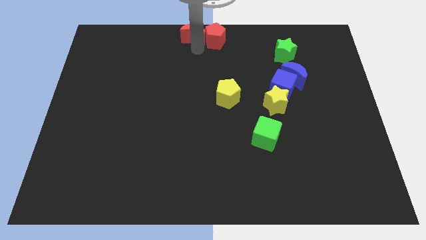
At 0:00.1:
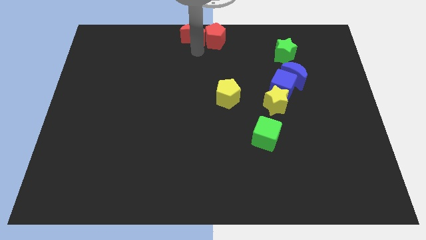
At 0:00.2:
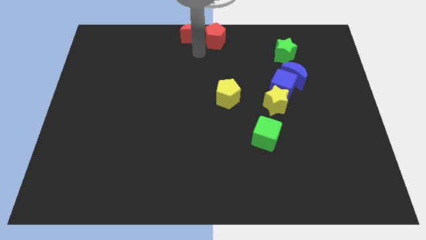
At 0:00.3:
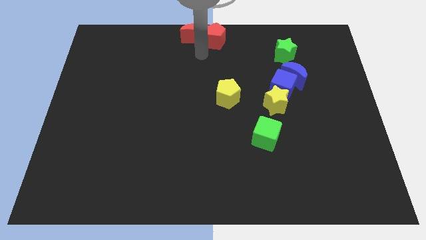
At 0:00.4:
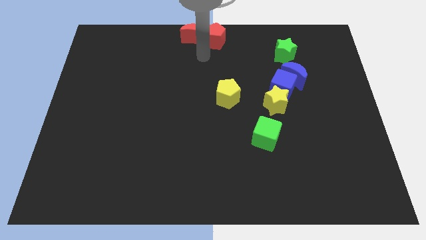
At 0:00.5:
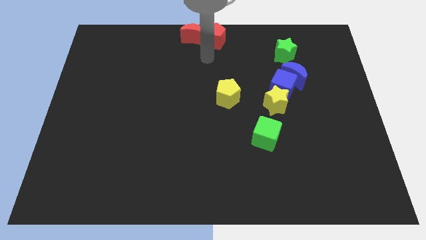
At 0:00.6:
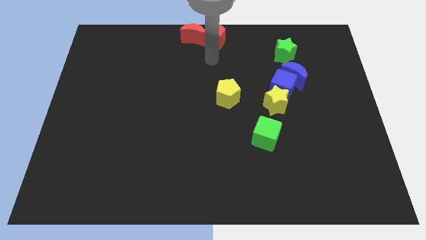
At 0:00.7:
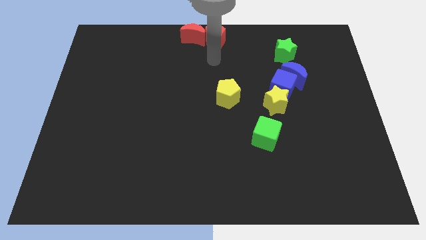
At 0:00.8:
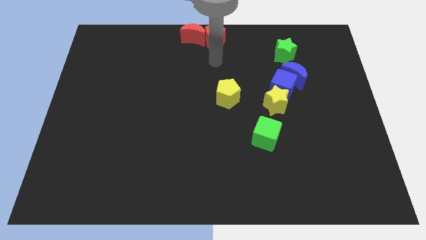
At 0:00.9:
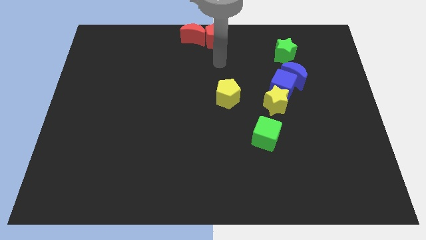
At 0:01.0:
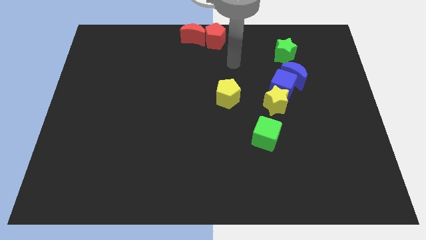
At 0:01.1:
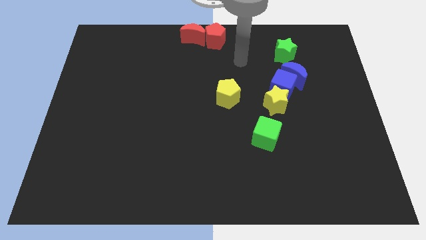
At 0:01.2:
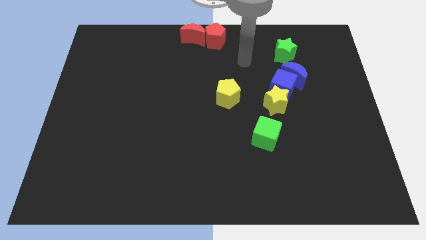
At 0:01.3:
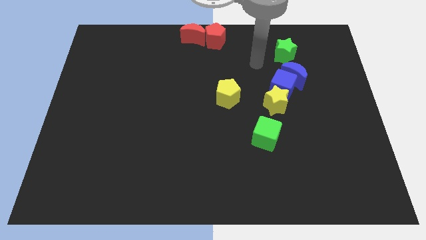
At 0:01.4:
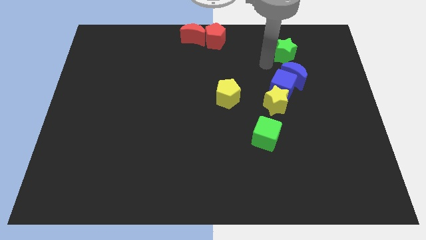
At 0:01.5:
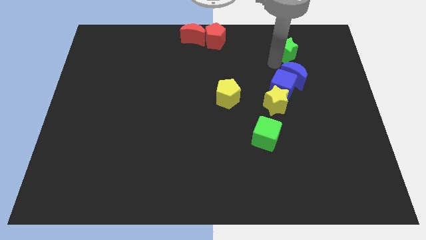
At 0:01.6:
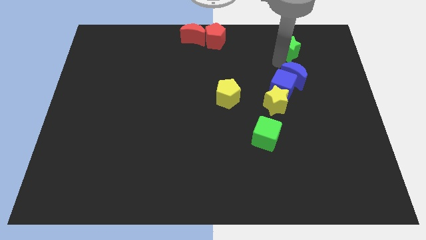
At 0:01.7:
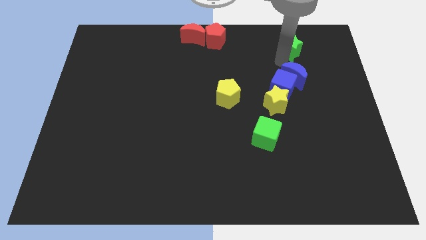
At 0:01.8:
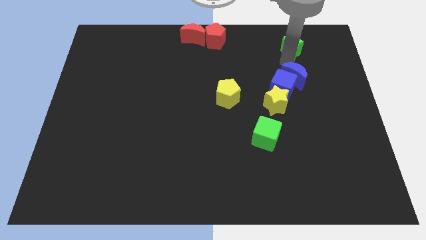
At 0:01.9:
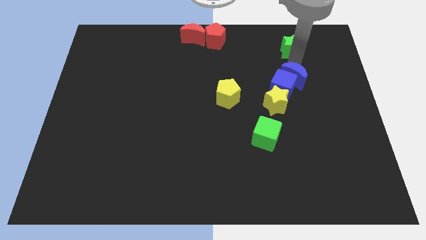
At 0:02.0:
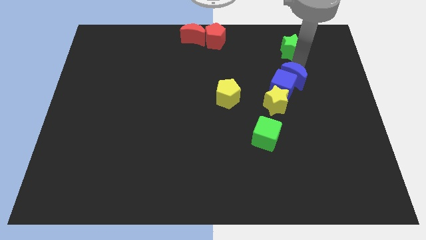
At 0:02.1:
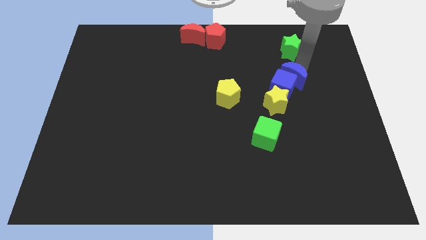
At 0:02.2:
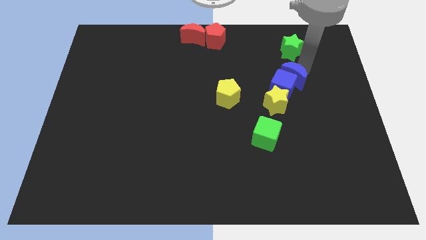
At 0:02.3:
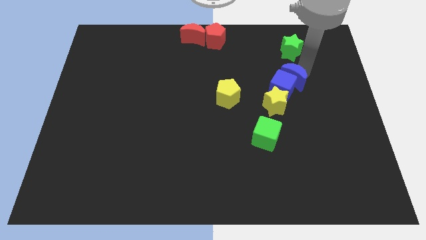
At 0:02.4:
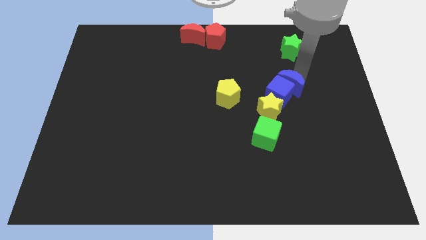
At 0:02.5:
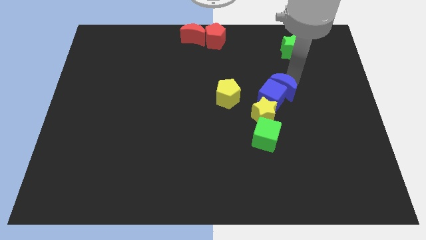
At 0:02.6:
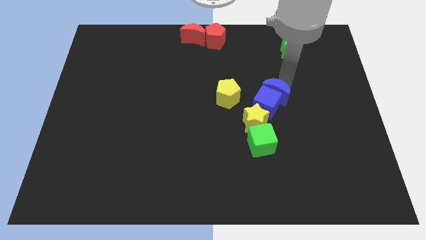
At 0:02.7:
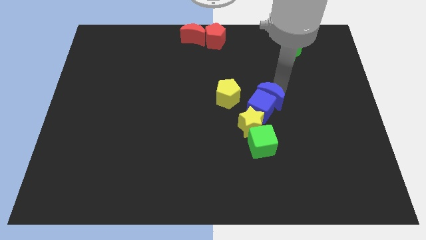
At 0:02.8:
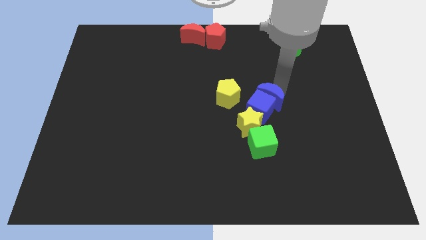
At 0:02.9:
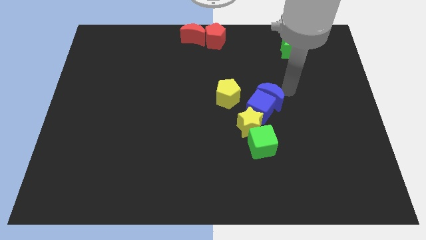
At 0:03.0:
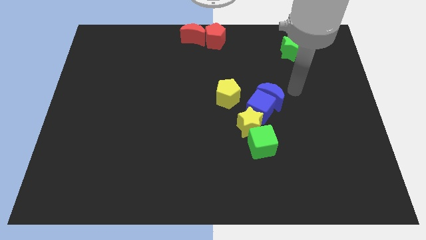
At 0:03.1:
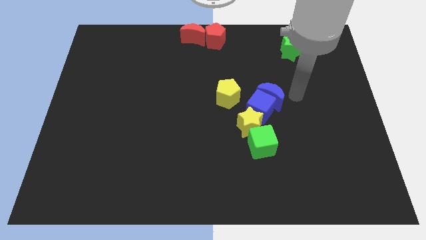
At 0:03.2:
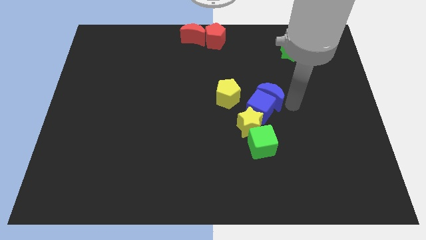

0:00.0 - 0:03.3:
push the group of blue blocks and yellow star into the green cube

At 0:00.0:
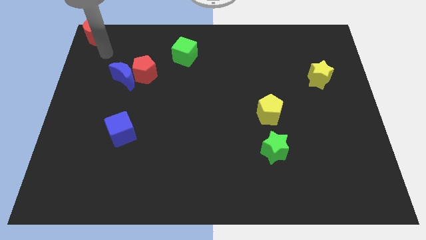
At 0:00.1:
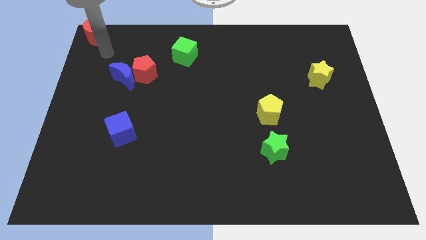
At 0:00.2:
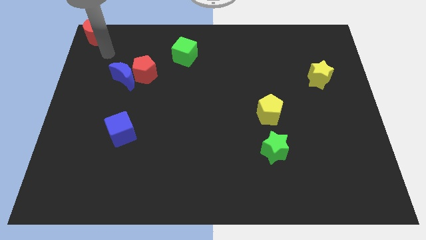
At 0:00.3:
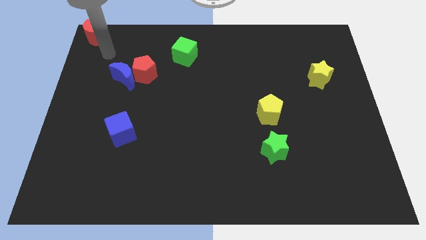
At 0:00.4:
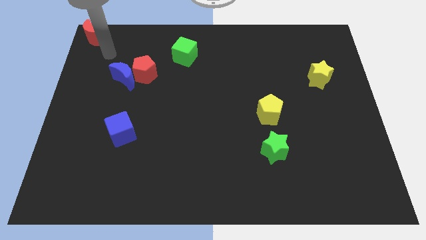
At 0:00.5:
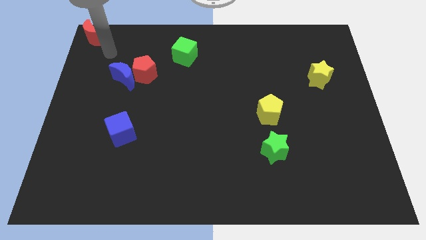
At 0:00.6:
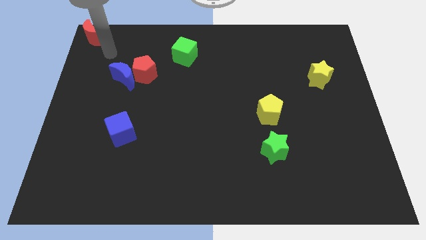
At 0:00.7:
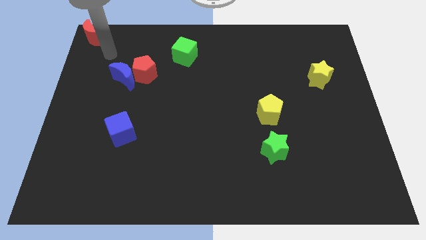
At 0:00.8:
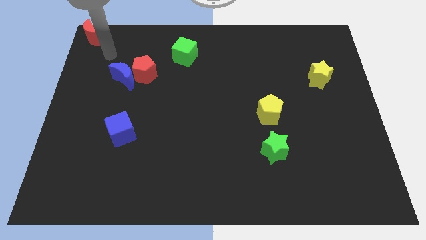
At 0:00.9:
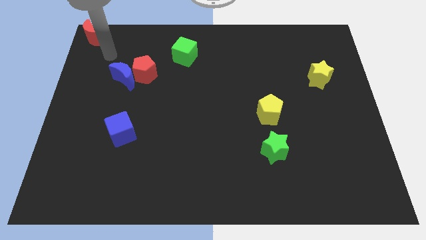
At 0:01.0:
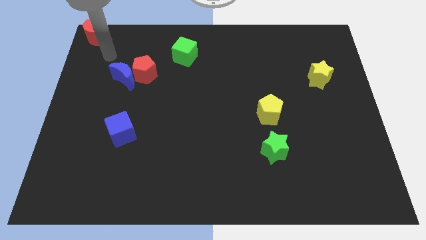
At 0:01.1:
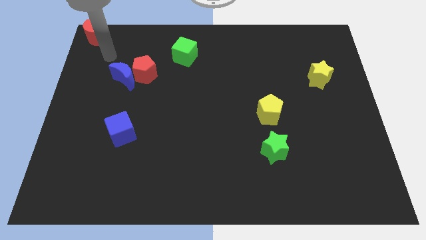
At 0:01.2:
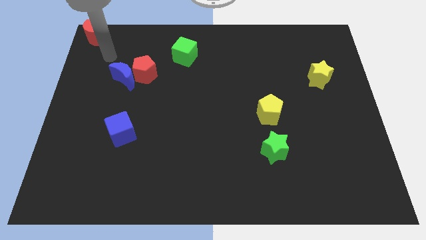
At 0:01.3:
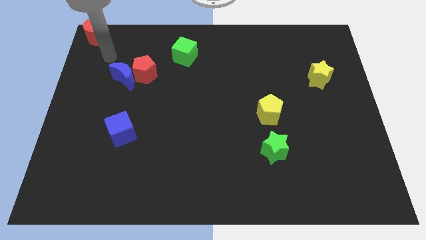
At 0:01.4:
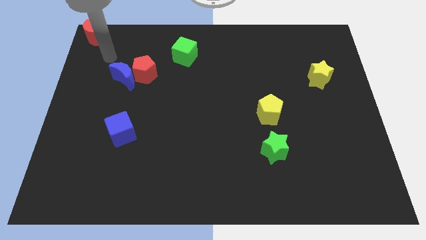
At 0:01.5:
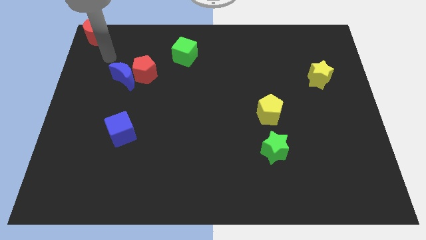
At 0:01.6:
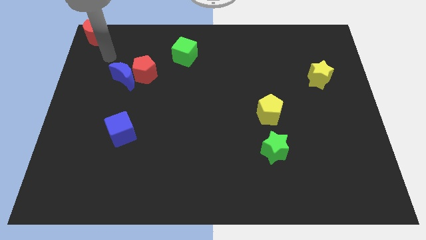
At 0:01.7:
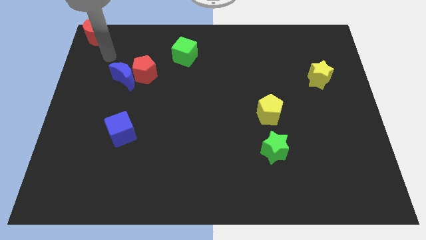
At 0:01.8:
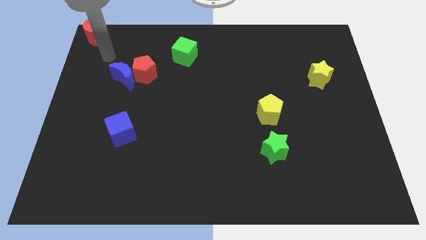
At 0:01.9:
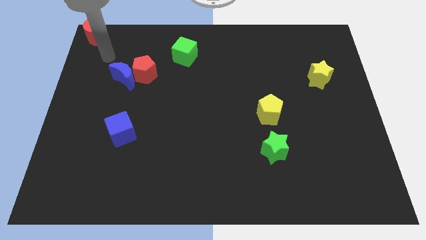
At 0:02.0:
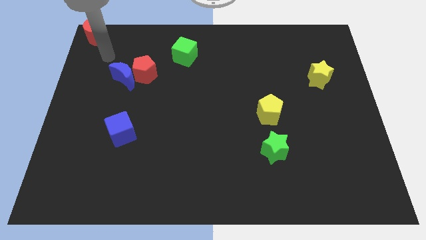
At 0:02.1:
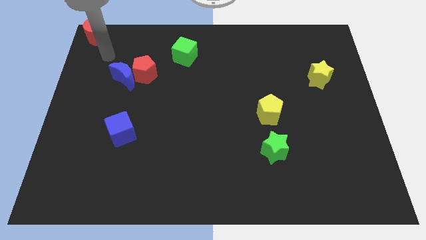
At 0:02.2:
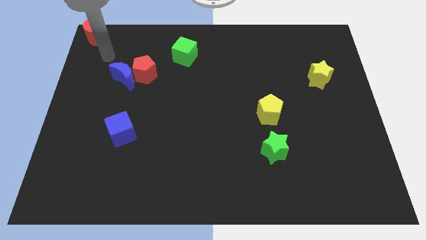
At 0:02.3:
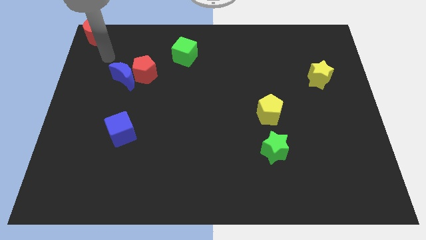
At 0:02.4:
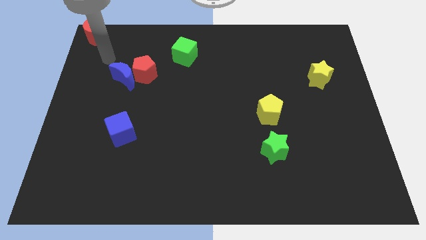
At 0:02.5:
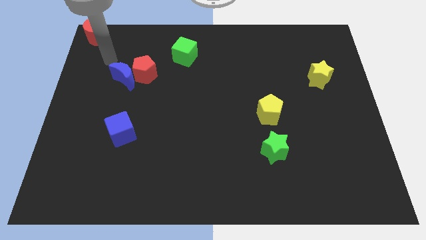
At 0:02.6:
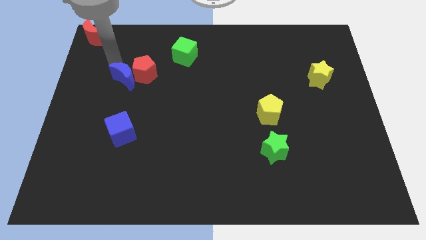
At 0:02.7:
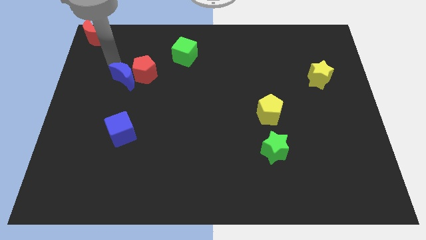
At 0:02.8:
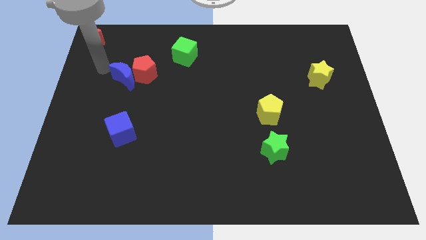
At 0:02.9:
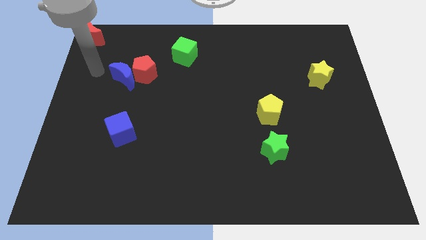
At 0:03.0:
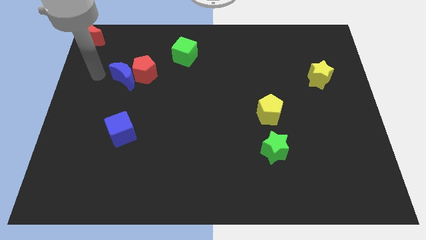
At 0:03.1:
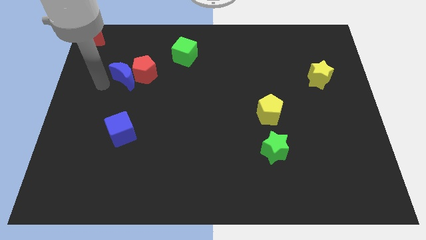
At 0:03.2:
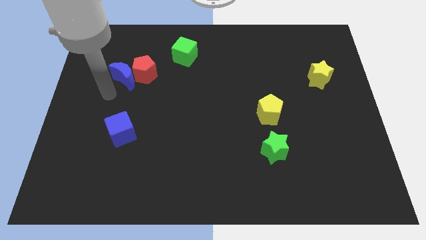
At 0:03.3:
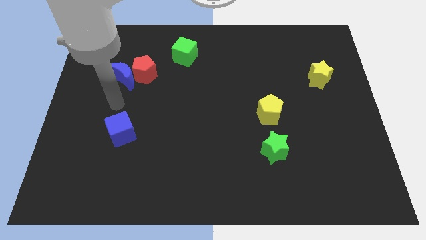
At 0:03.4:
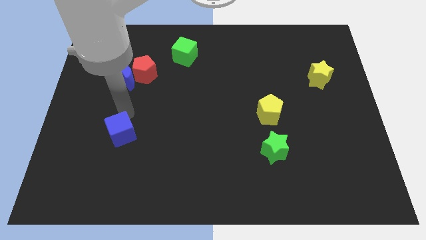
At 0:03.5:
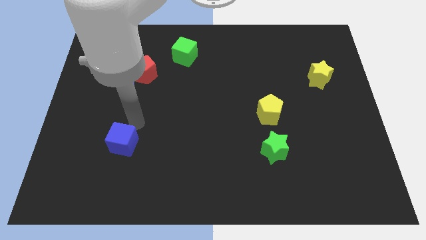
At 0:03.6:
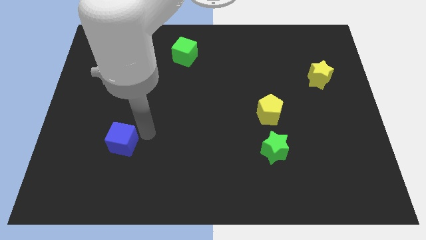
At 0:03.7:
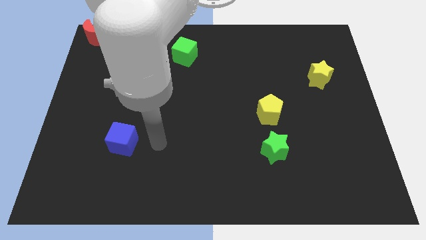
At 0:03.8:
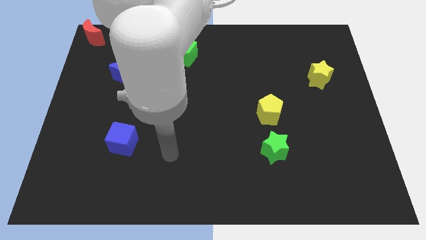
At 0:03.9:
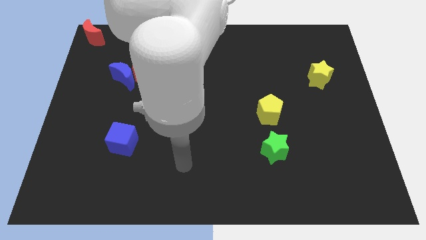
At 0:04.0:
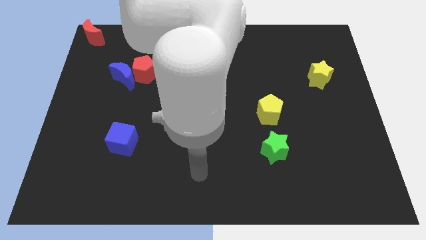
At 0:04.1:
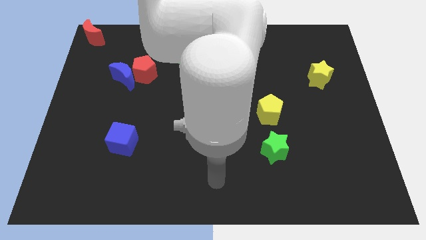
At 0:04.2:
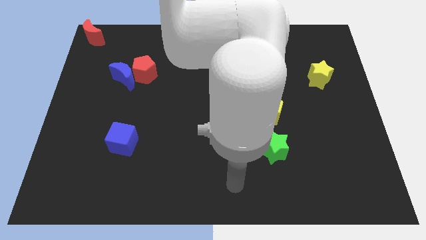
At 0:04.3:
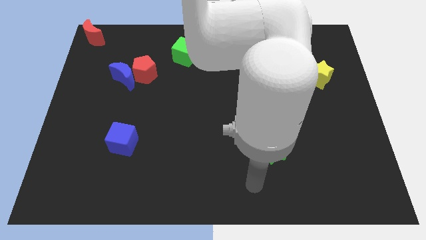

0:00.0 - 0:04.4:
slightly move the blue cube to the bottom

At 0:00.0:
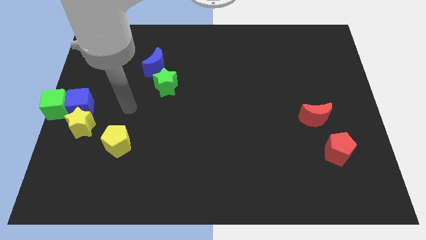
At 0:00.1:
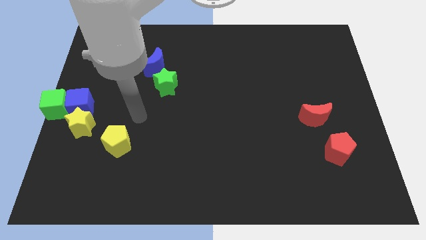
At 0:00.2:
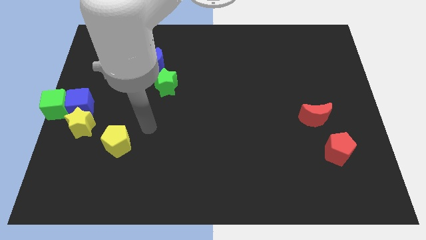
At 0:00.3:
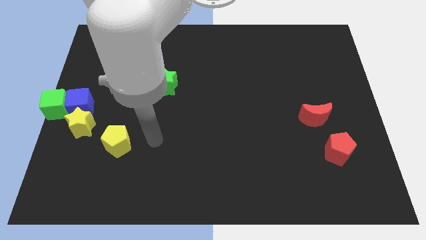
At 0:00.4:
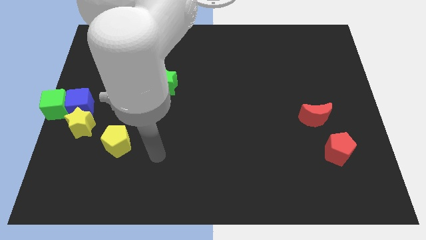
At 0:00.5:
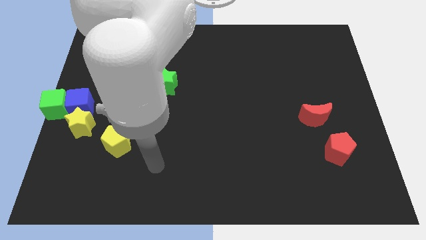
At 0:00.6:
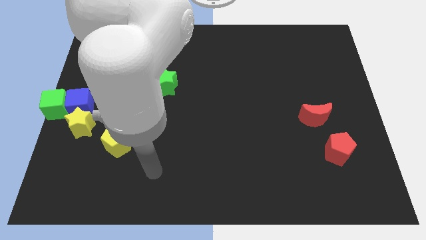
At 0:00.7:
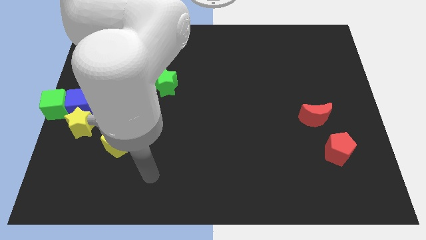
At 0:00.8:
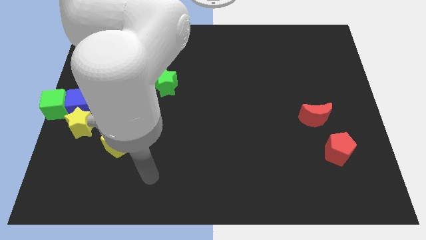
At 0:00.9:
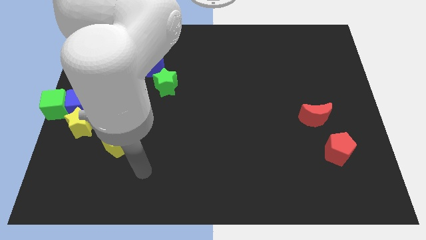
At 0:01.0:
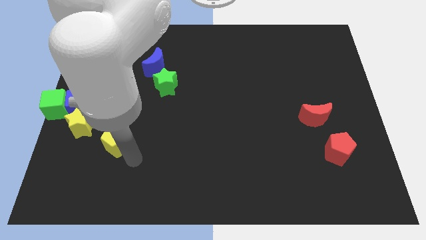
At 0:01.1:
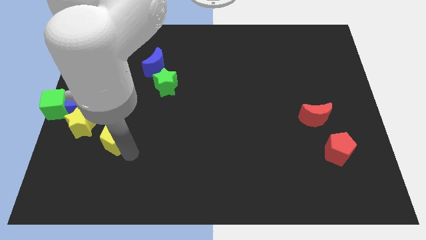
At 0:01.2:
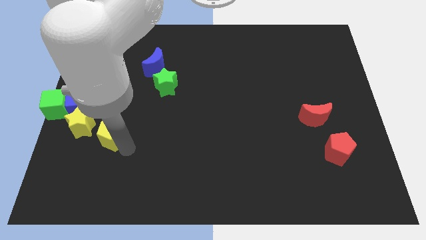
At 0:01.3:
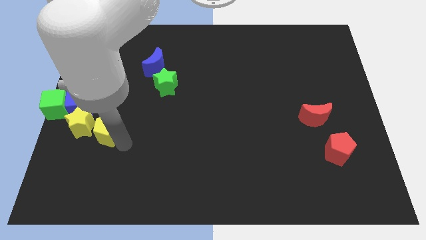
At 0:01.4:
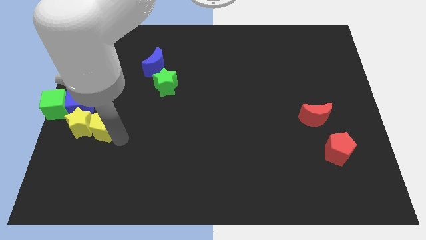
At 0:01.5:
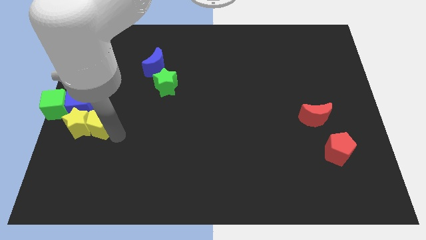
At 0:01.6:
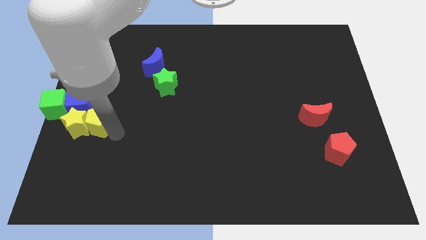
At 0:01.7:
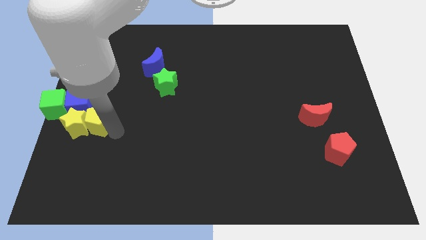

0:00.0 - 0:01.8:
place yellow pentagon to the right of yellow star
